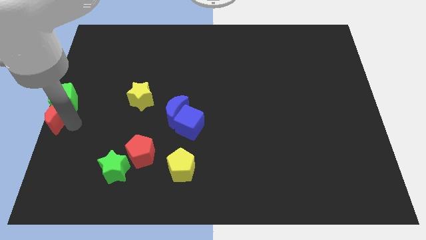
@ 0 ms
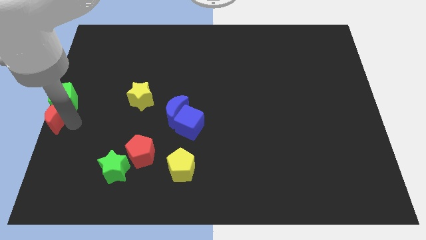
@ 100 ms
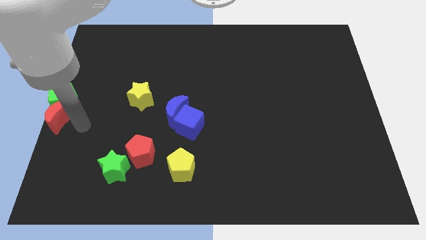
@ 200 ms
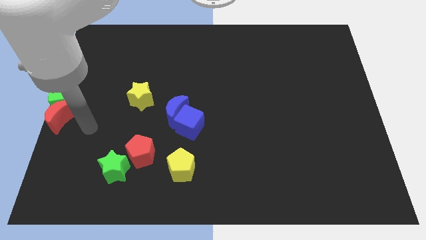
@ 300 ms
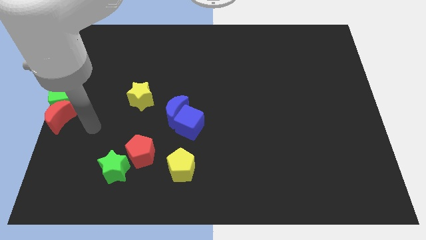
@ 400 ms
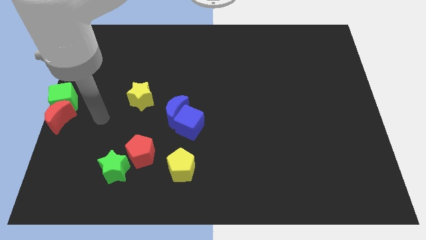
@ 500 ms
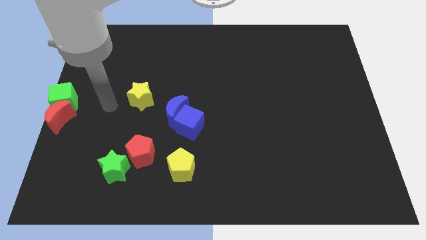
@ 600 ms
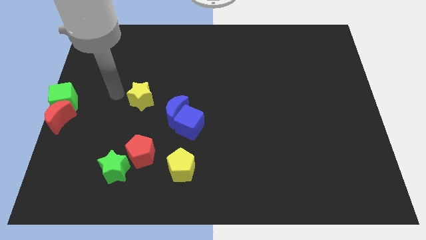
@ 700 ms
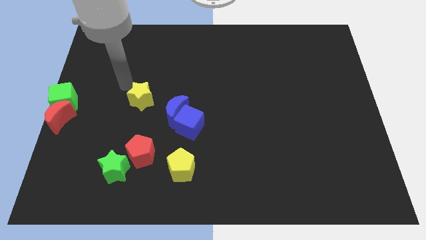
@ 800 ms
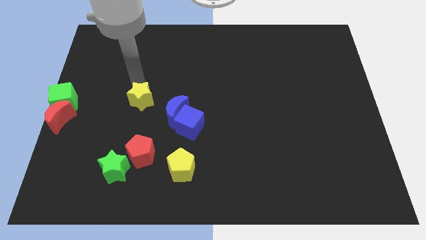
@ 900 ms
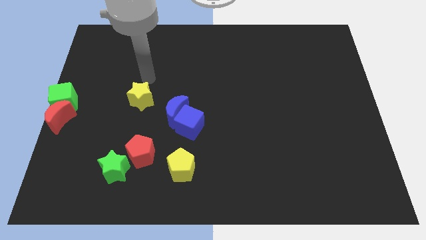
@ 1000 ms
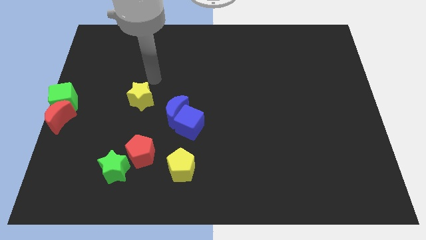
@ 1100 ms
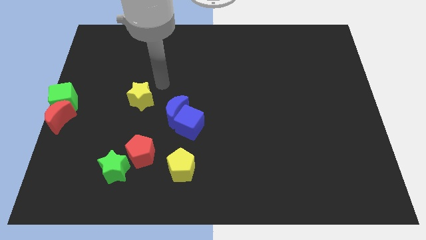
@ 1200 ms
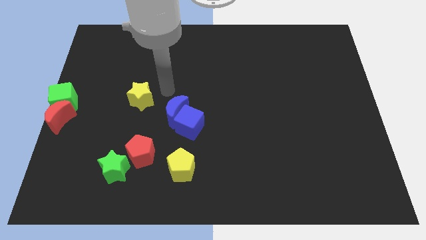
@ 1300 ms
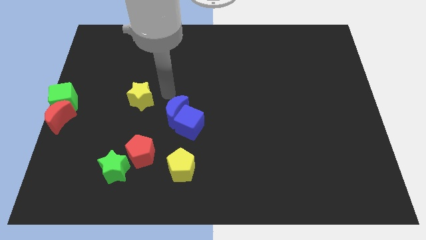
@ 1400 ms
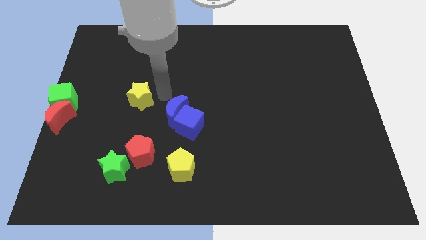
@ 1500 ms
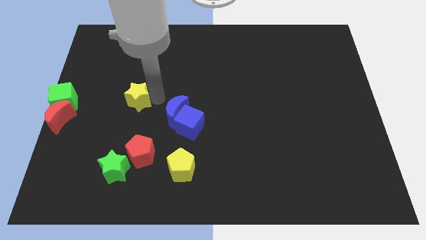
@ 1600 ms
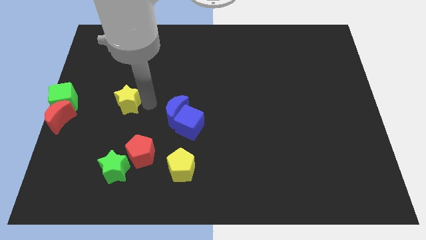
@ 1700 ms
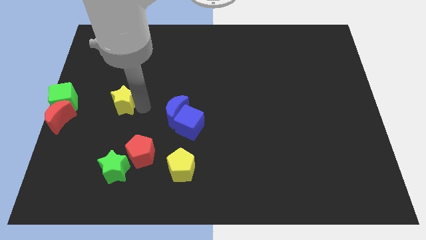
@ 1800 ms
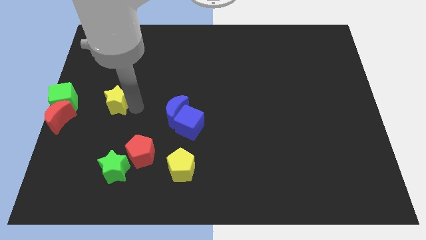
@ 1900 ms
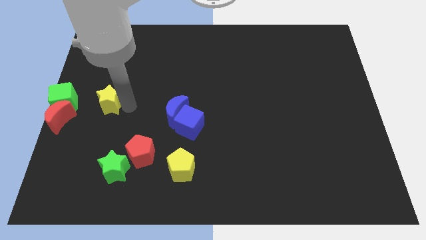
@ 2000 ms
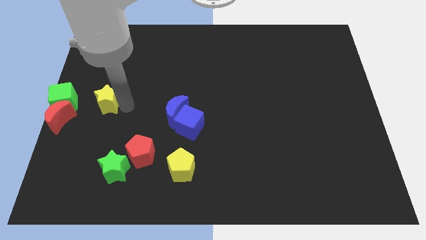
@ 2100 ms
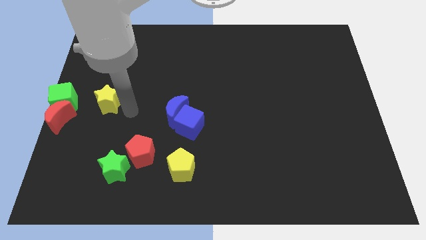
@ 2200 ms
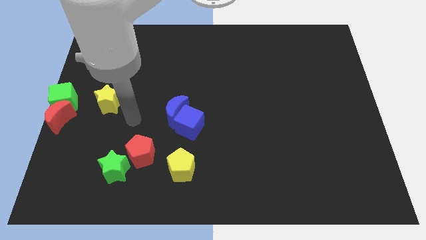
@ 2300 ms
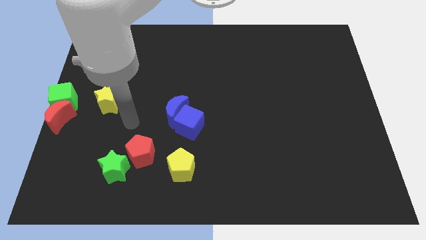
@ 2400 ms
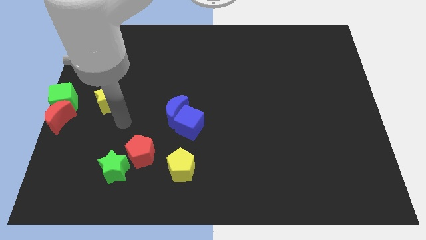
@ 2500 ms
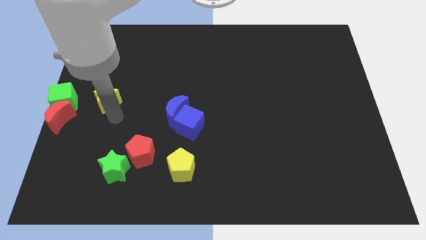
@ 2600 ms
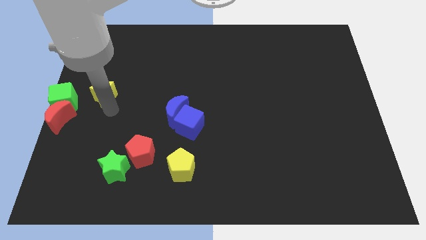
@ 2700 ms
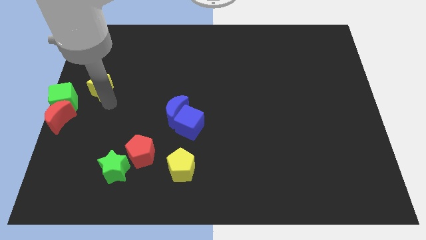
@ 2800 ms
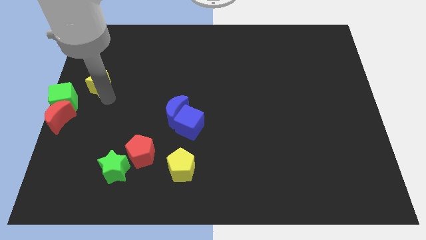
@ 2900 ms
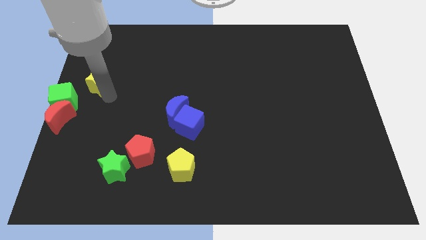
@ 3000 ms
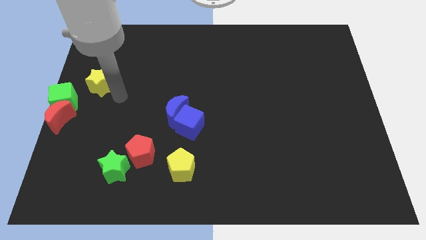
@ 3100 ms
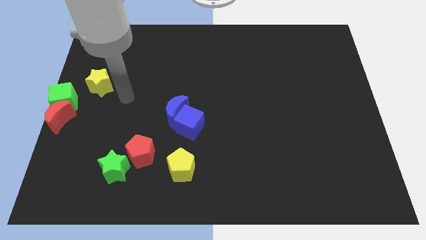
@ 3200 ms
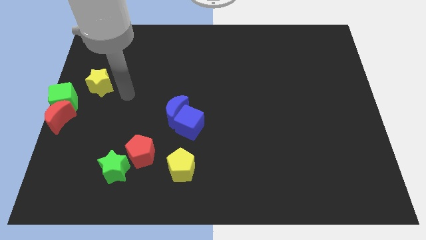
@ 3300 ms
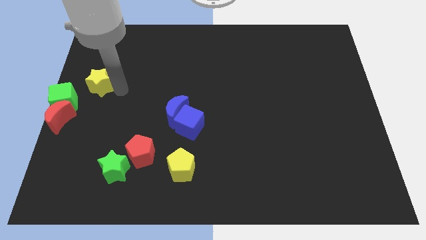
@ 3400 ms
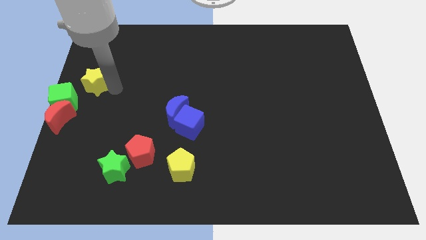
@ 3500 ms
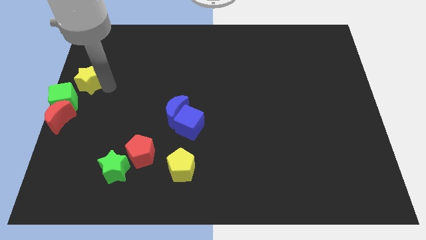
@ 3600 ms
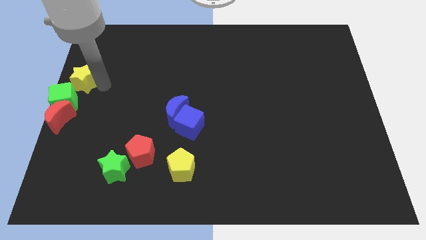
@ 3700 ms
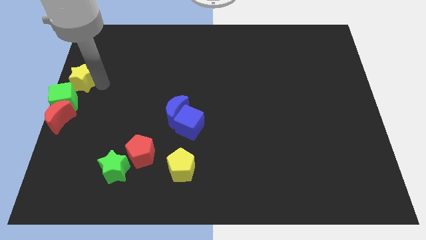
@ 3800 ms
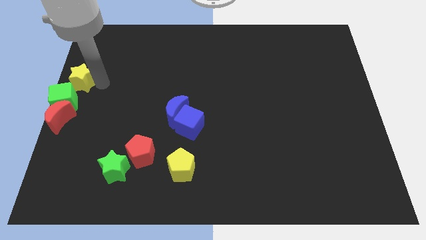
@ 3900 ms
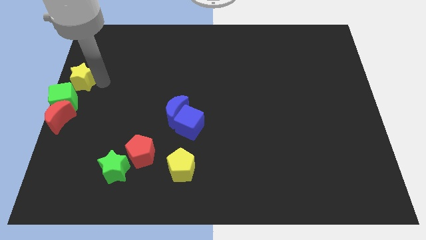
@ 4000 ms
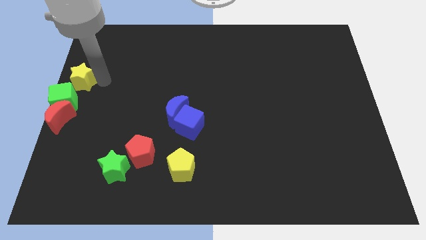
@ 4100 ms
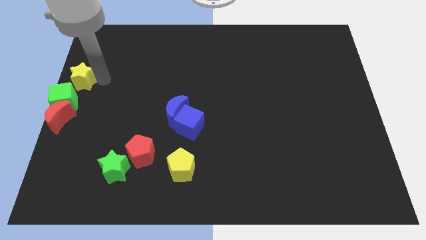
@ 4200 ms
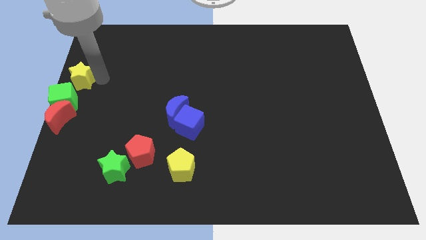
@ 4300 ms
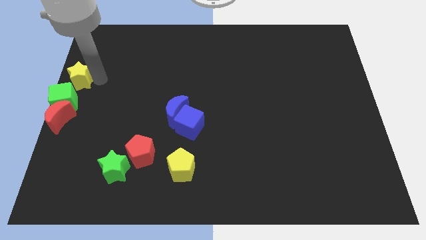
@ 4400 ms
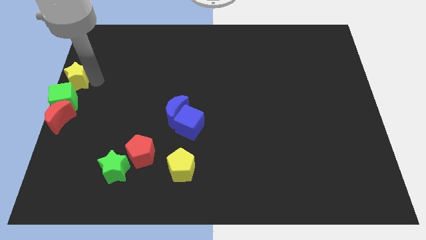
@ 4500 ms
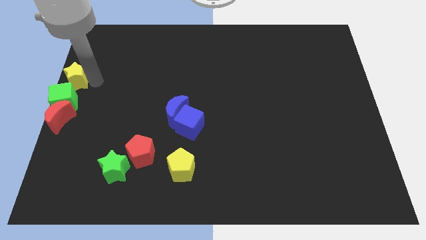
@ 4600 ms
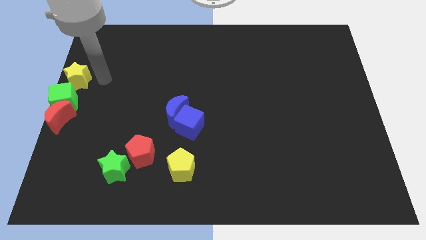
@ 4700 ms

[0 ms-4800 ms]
drag the yellow star above the green cube

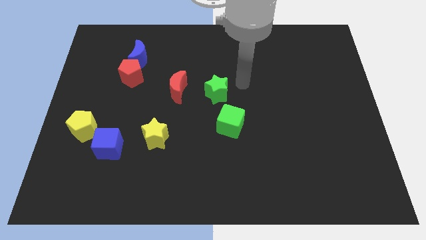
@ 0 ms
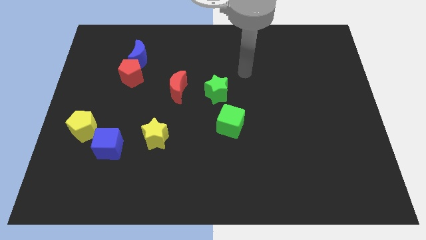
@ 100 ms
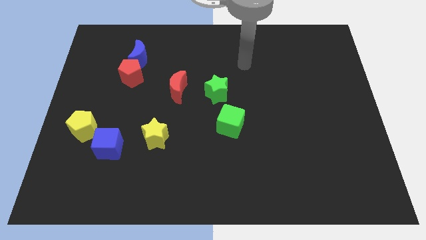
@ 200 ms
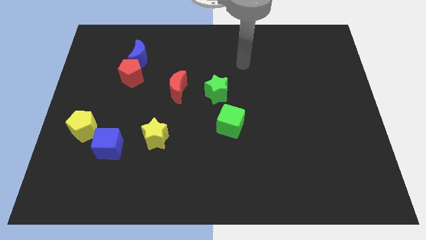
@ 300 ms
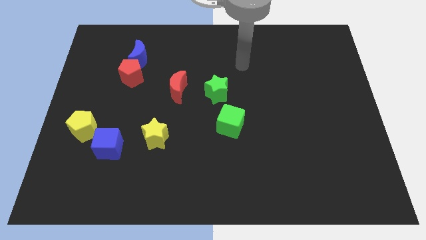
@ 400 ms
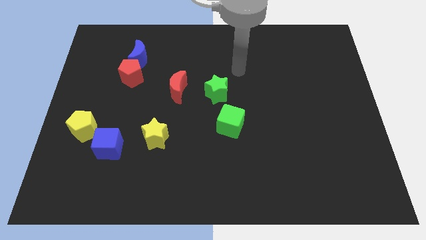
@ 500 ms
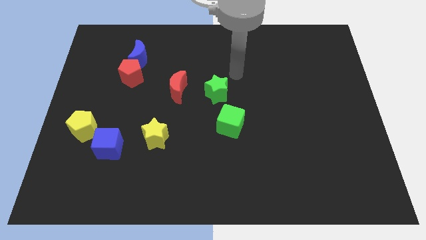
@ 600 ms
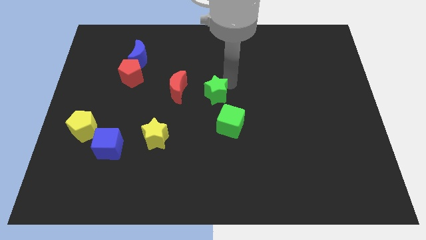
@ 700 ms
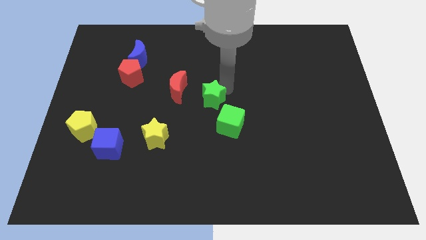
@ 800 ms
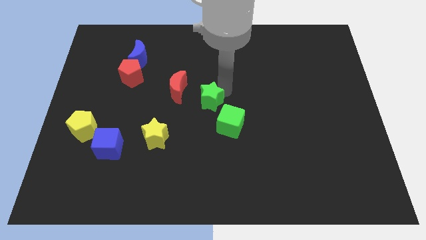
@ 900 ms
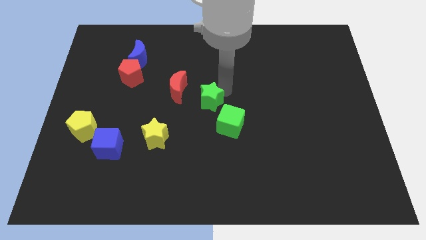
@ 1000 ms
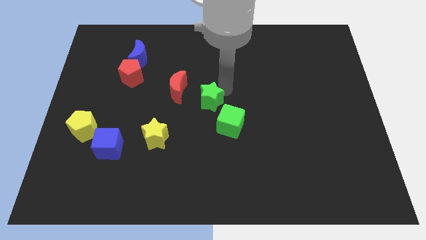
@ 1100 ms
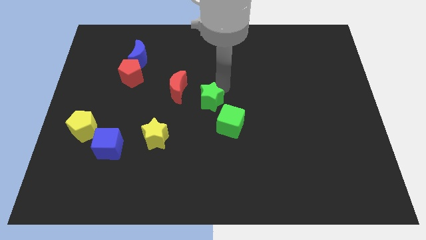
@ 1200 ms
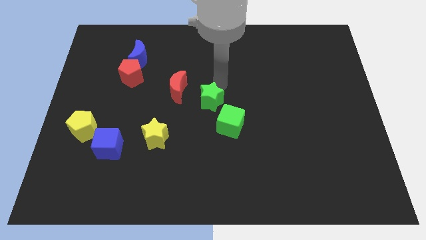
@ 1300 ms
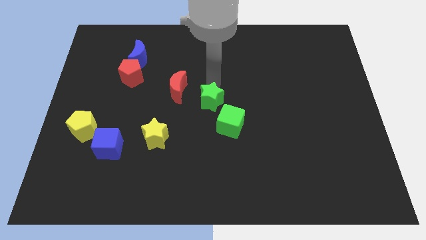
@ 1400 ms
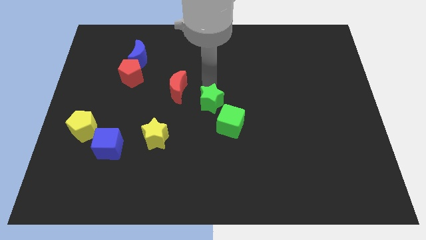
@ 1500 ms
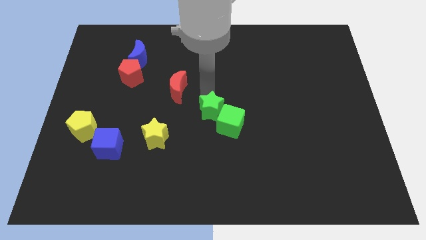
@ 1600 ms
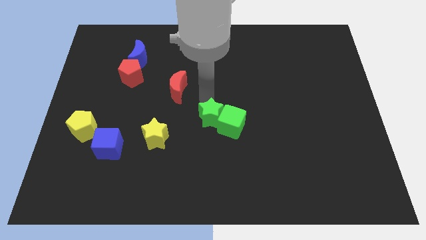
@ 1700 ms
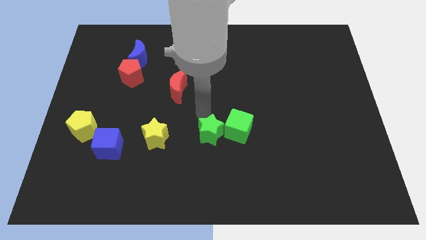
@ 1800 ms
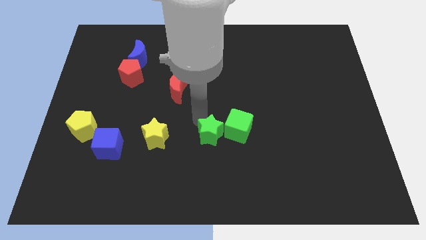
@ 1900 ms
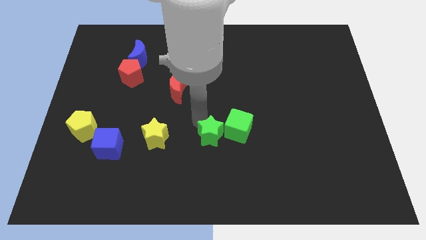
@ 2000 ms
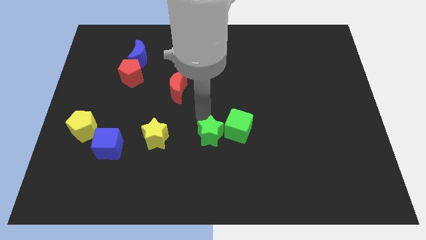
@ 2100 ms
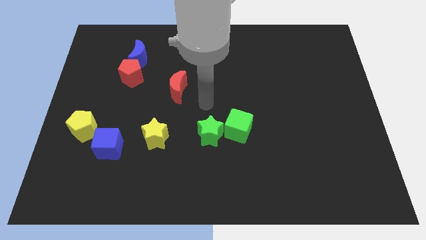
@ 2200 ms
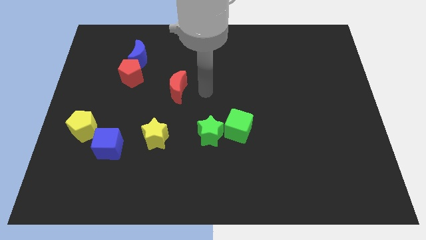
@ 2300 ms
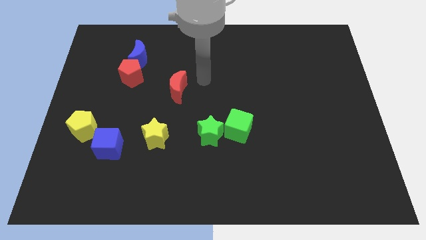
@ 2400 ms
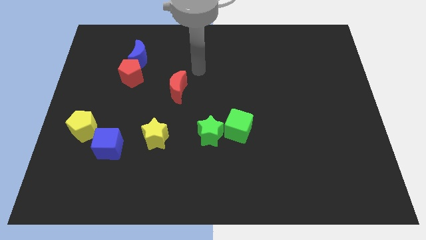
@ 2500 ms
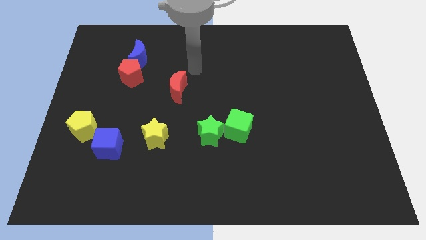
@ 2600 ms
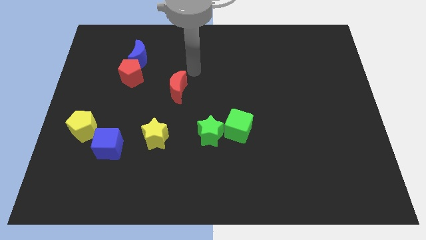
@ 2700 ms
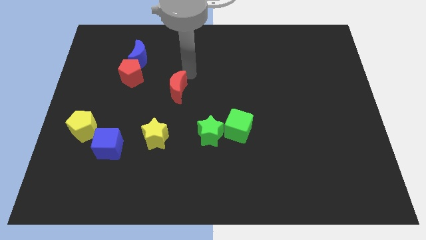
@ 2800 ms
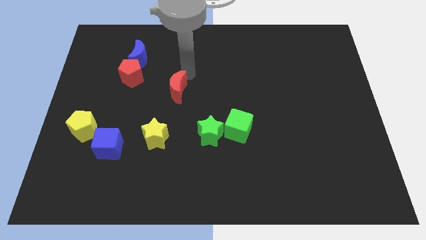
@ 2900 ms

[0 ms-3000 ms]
place the green star to the right of the yellow star

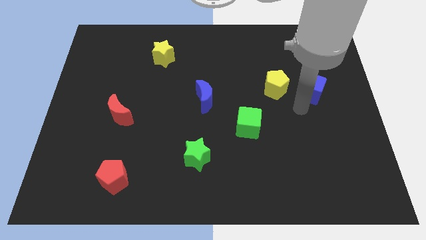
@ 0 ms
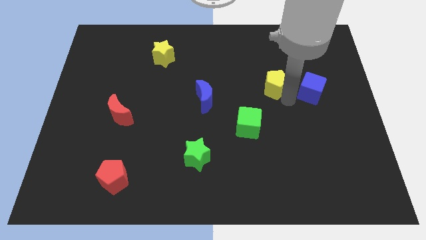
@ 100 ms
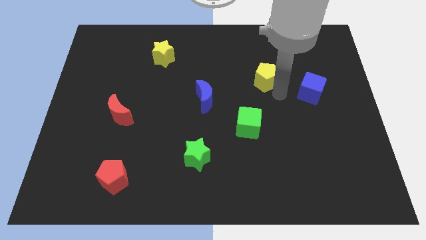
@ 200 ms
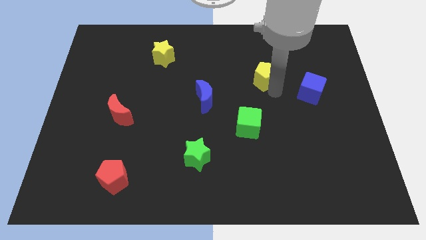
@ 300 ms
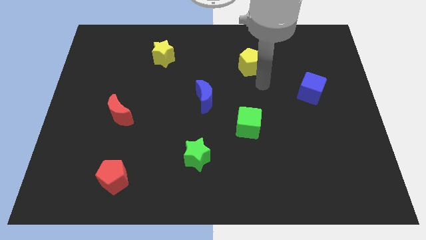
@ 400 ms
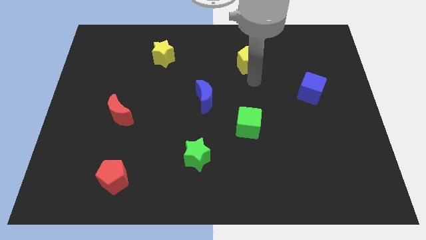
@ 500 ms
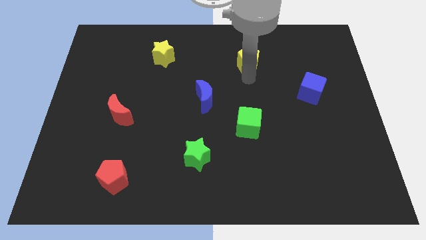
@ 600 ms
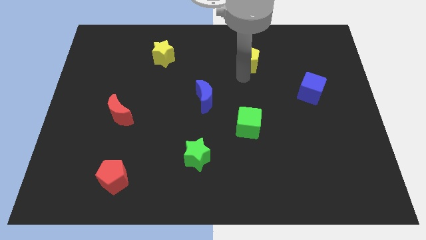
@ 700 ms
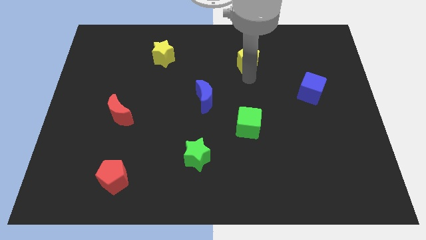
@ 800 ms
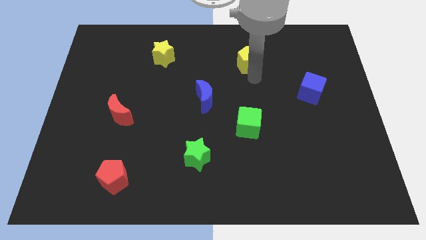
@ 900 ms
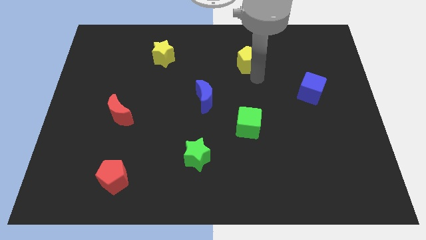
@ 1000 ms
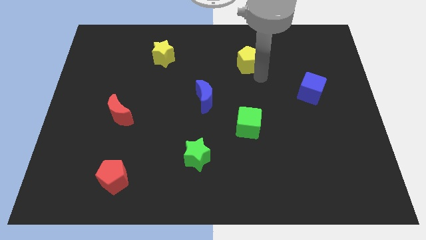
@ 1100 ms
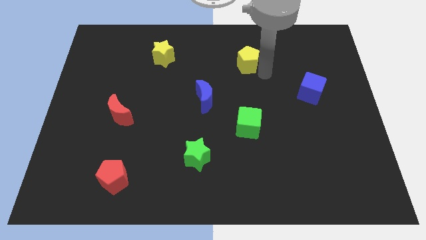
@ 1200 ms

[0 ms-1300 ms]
place the yellow pentagon above the green cube
